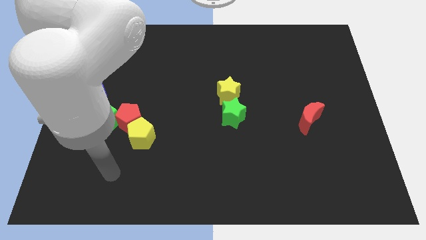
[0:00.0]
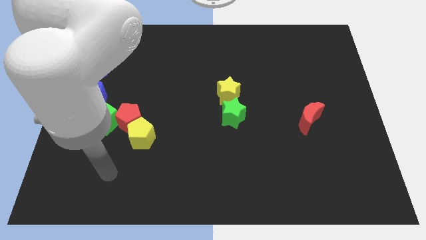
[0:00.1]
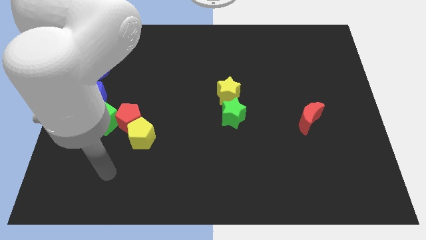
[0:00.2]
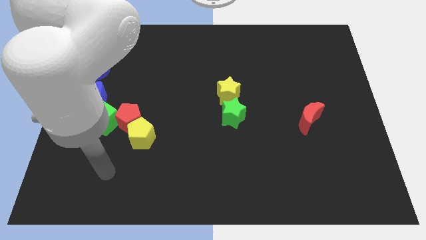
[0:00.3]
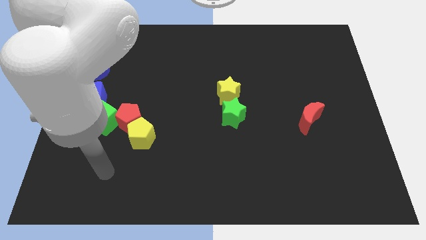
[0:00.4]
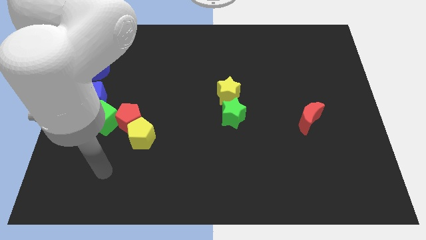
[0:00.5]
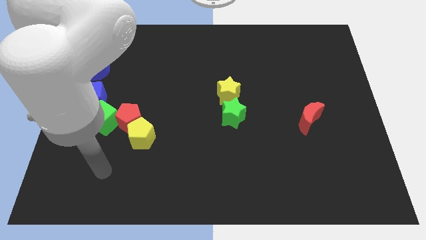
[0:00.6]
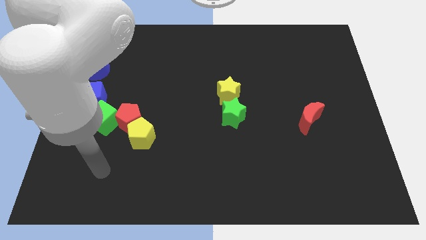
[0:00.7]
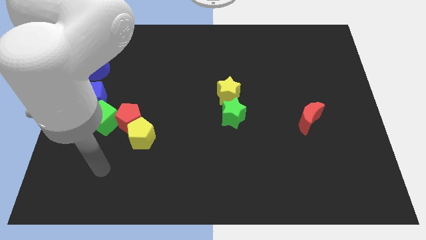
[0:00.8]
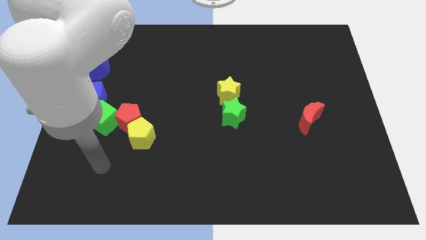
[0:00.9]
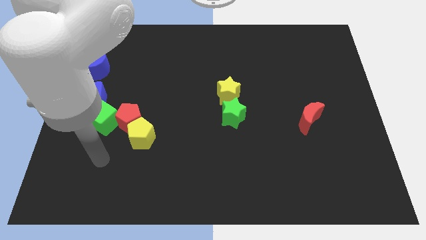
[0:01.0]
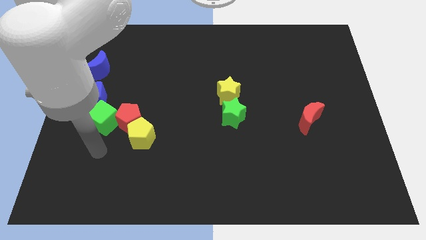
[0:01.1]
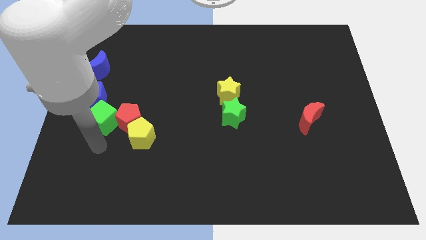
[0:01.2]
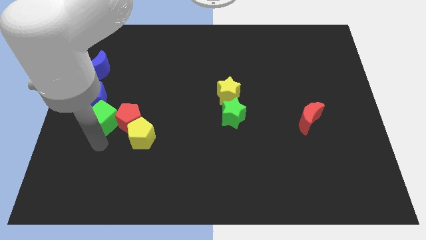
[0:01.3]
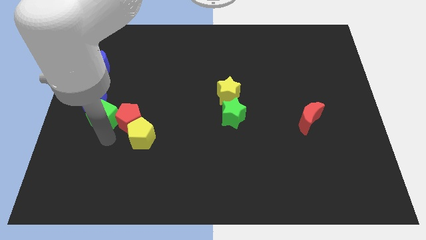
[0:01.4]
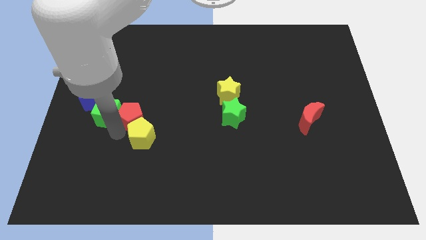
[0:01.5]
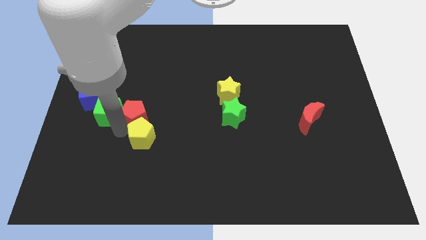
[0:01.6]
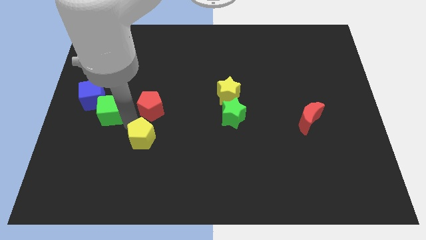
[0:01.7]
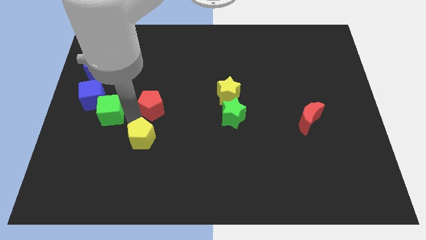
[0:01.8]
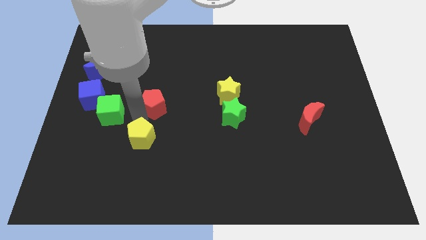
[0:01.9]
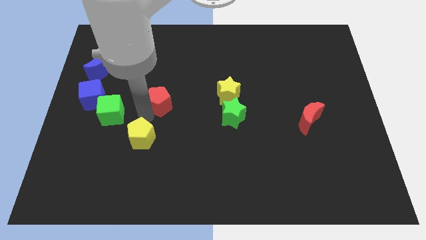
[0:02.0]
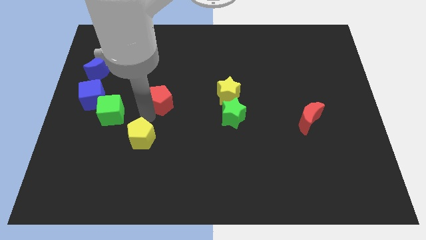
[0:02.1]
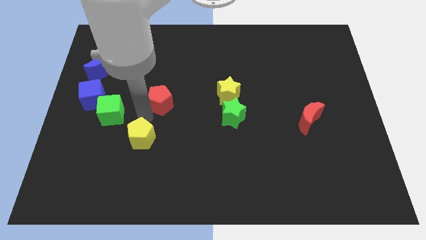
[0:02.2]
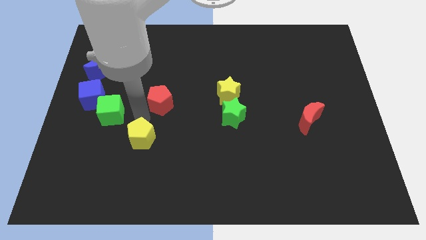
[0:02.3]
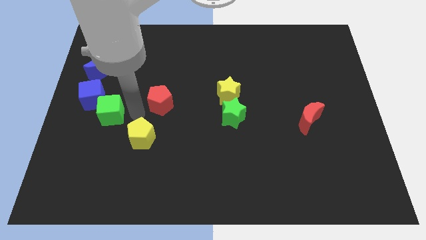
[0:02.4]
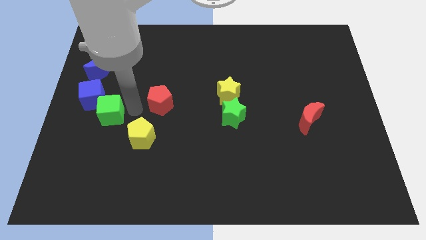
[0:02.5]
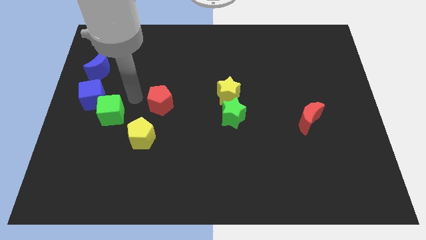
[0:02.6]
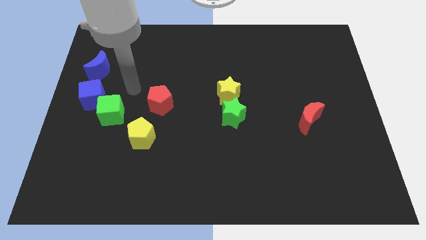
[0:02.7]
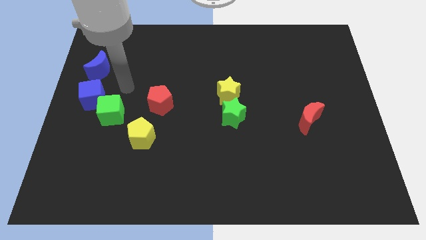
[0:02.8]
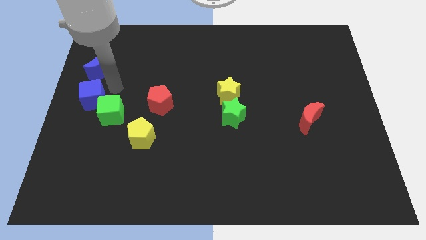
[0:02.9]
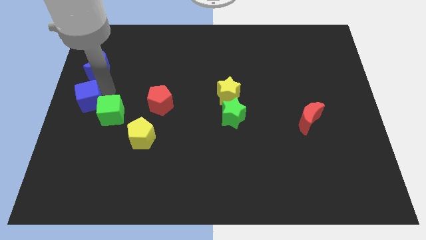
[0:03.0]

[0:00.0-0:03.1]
slightly move the red pentagon towards top right of the yellow pentagon

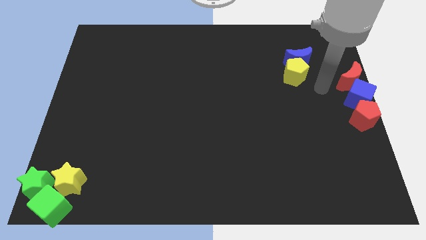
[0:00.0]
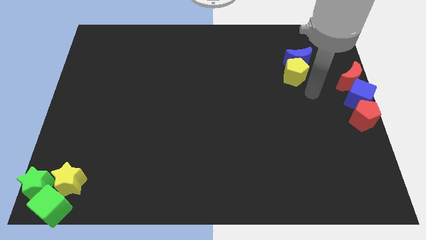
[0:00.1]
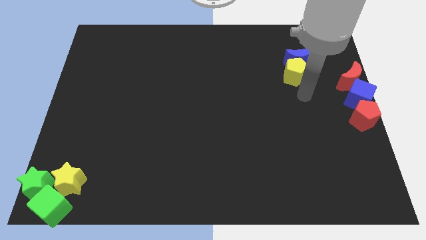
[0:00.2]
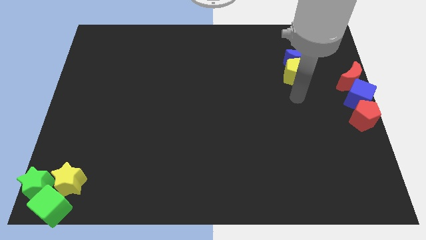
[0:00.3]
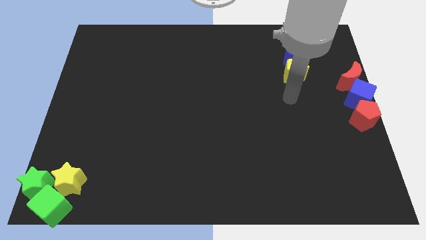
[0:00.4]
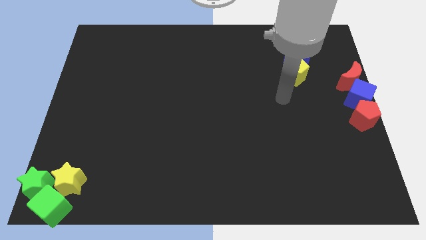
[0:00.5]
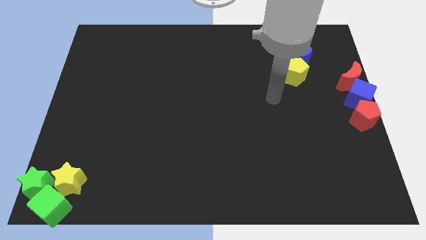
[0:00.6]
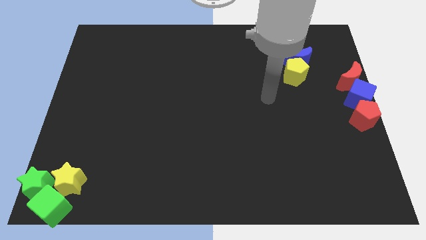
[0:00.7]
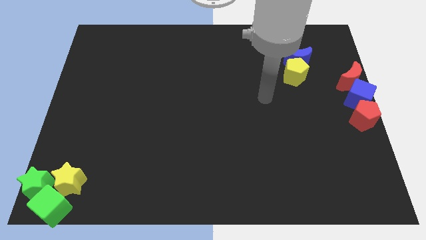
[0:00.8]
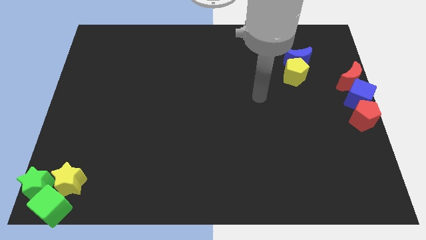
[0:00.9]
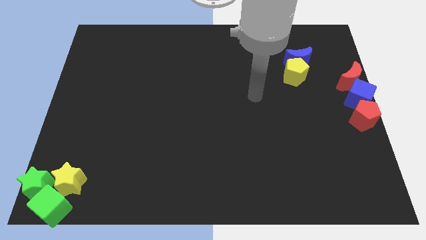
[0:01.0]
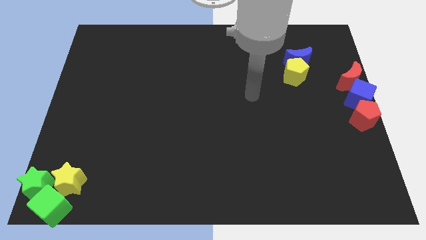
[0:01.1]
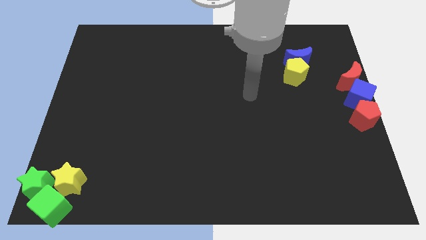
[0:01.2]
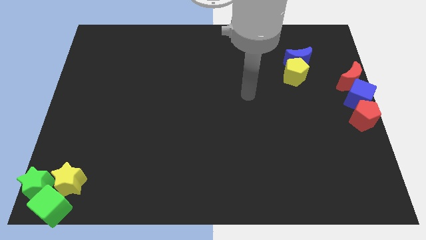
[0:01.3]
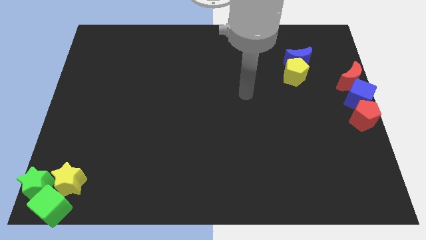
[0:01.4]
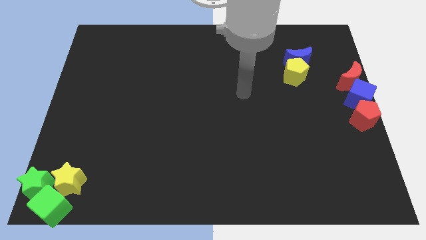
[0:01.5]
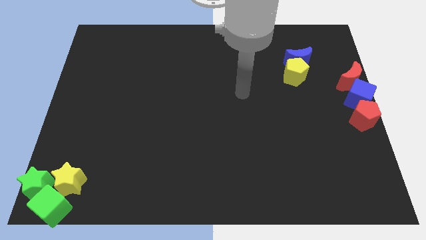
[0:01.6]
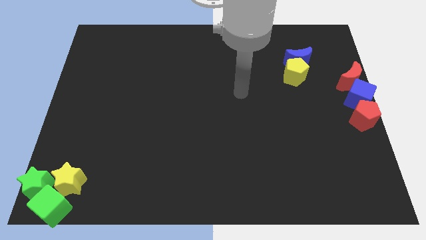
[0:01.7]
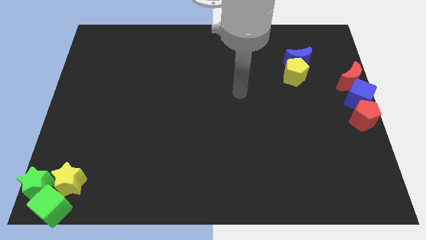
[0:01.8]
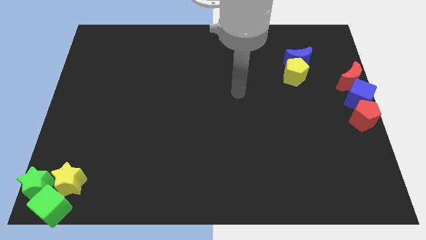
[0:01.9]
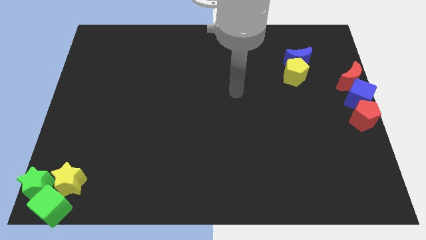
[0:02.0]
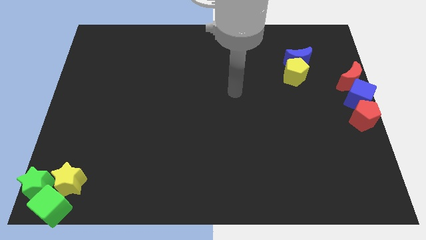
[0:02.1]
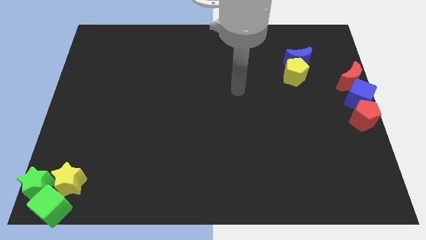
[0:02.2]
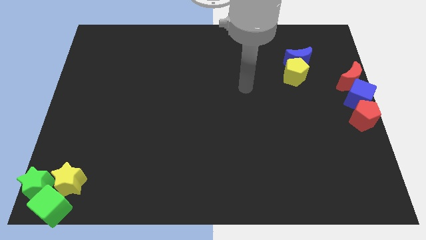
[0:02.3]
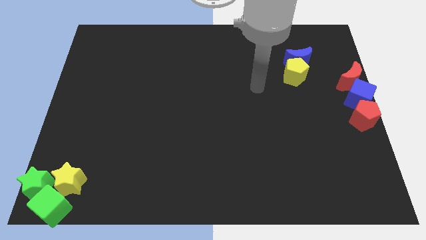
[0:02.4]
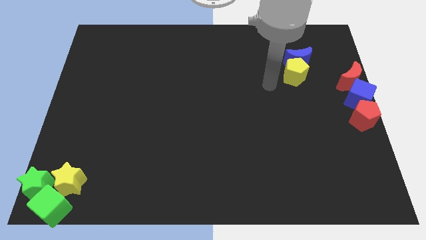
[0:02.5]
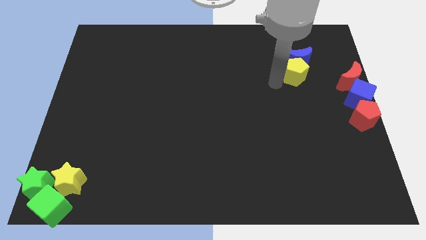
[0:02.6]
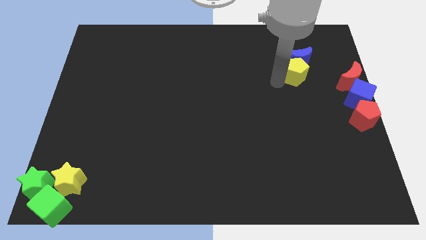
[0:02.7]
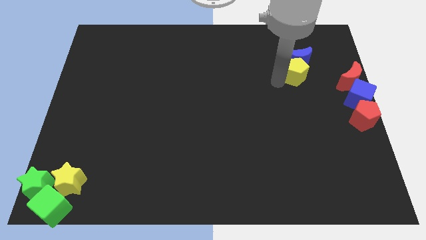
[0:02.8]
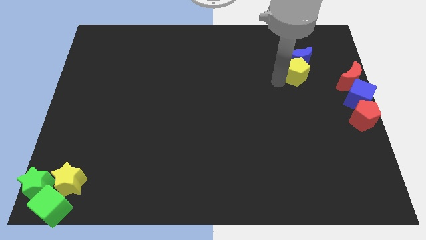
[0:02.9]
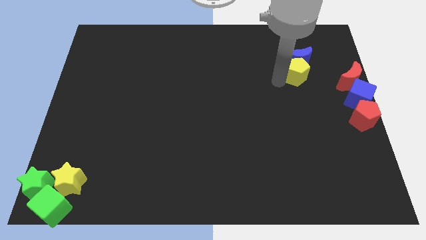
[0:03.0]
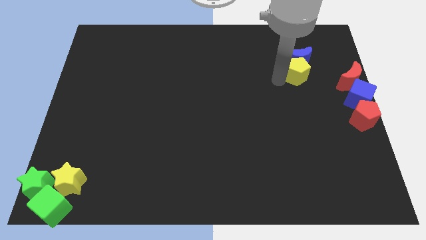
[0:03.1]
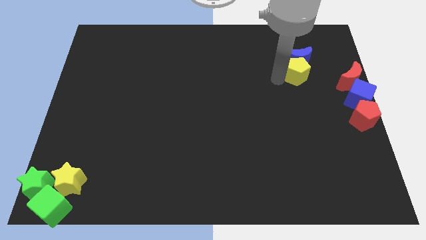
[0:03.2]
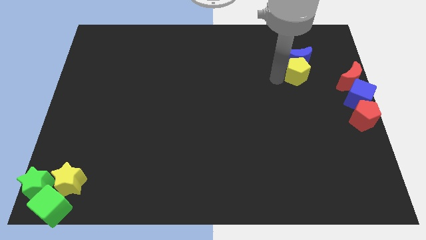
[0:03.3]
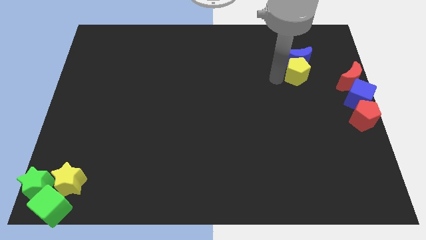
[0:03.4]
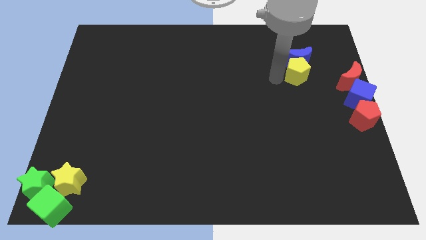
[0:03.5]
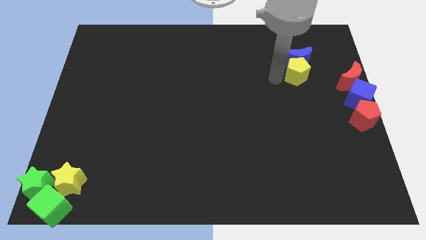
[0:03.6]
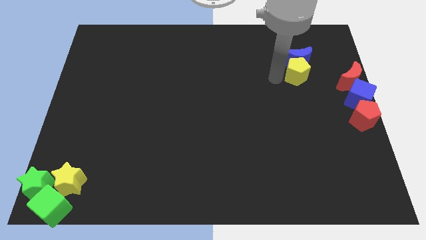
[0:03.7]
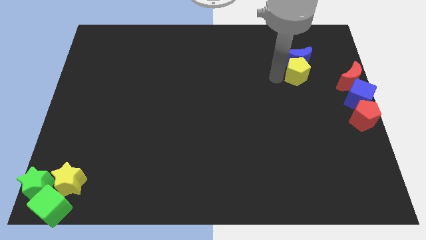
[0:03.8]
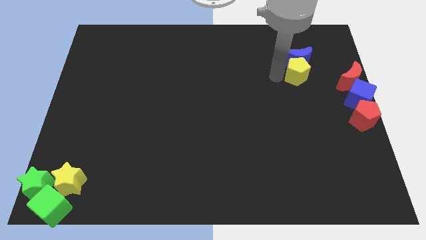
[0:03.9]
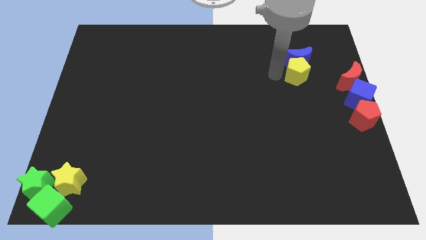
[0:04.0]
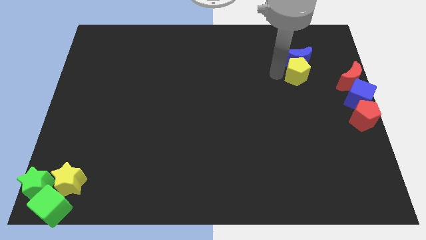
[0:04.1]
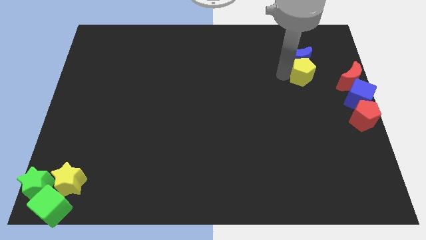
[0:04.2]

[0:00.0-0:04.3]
move the arm to the left of the yellow pentagon

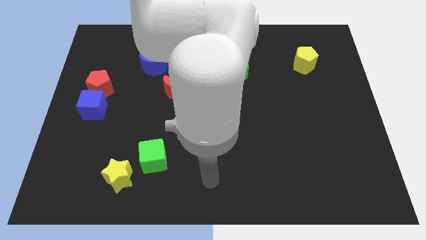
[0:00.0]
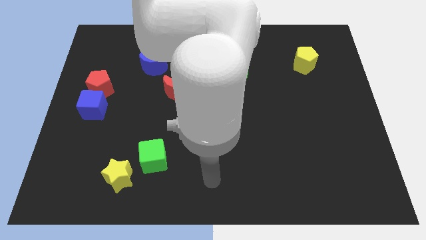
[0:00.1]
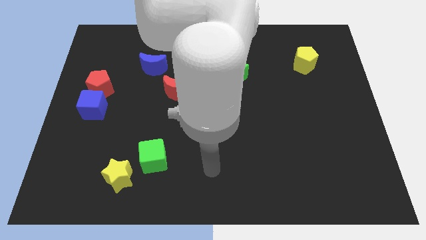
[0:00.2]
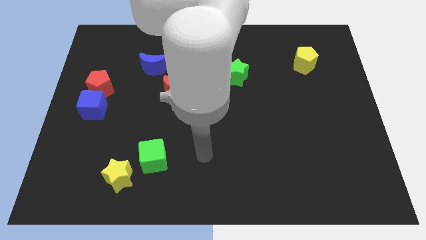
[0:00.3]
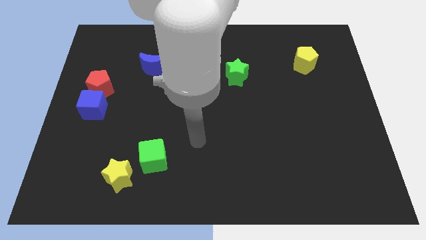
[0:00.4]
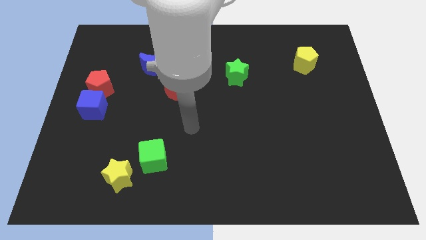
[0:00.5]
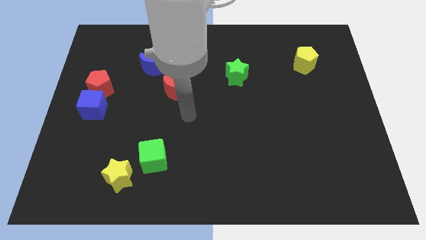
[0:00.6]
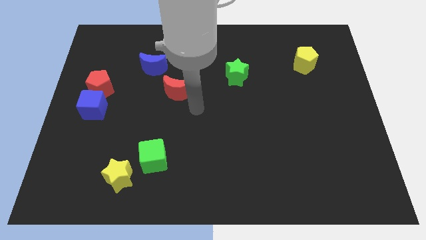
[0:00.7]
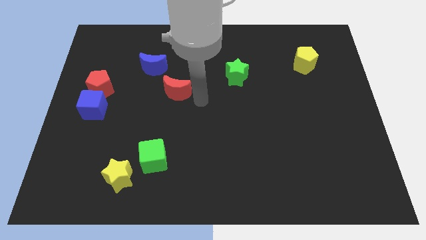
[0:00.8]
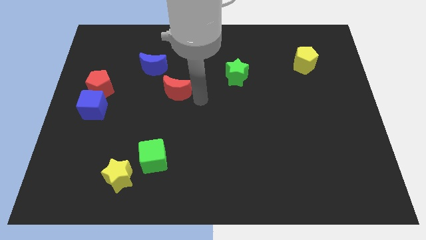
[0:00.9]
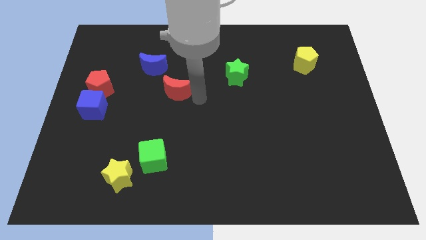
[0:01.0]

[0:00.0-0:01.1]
point your arm at the right of the red crescent

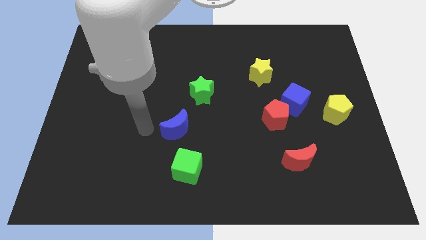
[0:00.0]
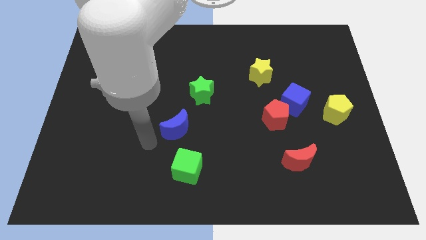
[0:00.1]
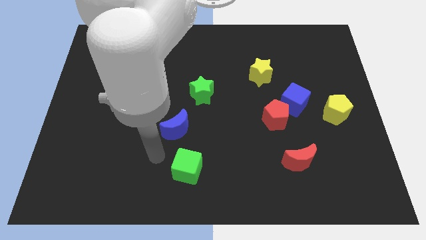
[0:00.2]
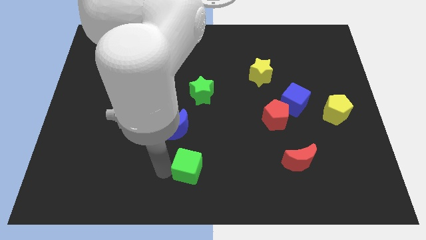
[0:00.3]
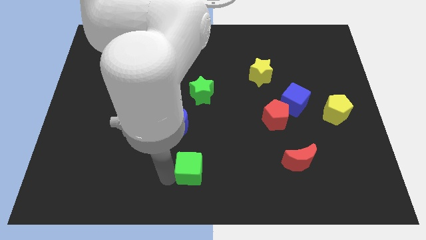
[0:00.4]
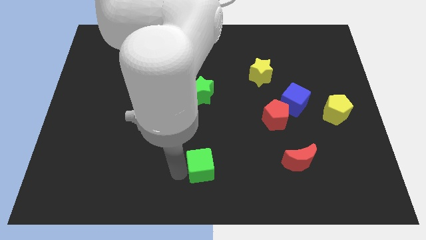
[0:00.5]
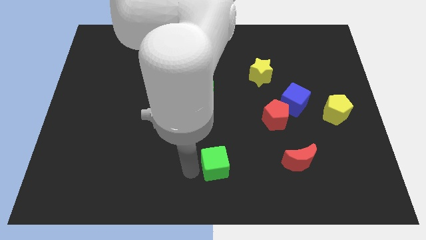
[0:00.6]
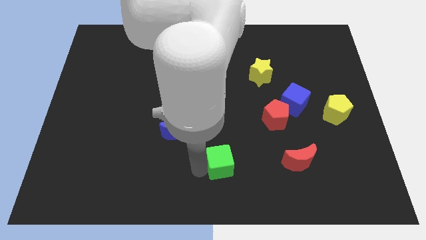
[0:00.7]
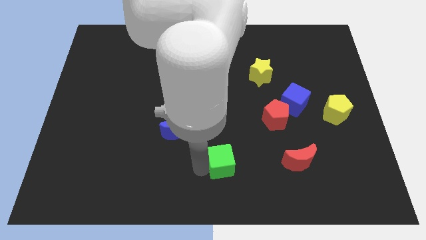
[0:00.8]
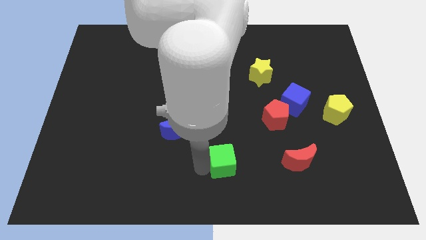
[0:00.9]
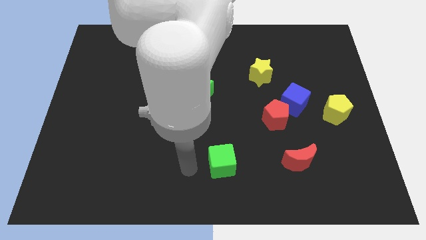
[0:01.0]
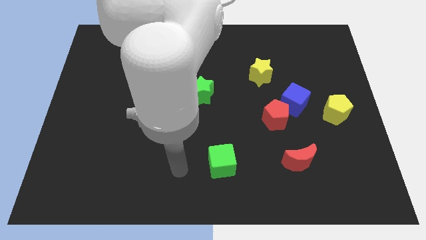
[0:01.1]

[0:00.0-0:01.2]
move the green cube slightly to the right
